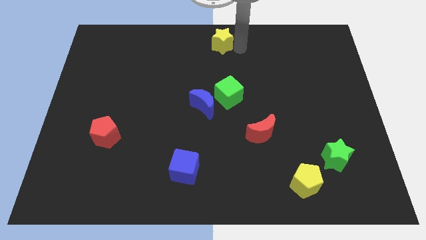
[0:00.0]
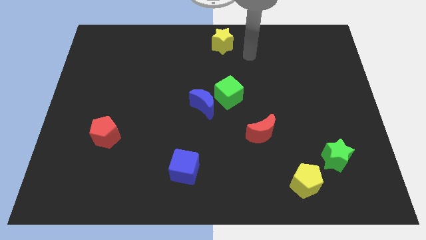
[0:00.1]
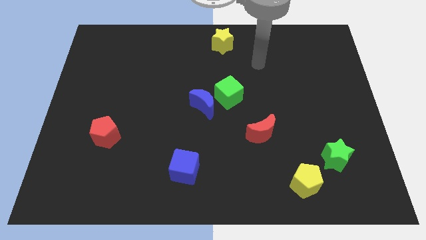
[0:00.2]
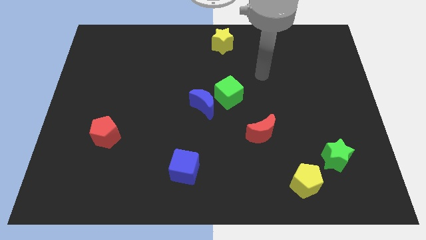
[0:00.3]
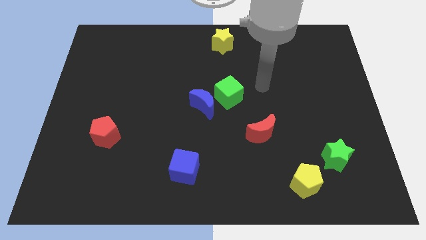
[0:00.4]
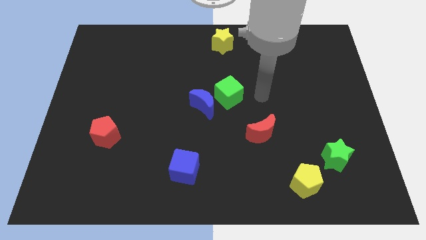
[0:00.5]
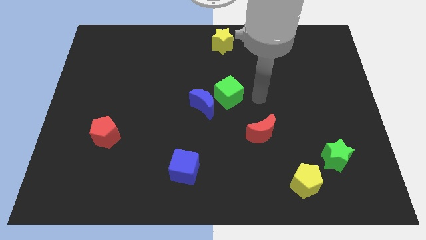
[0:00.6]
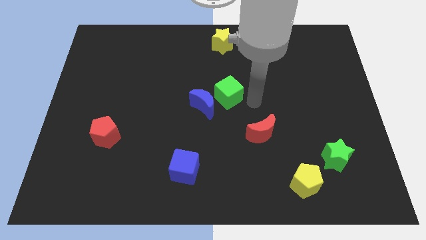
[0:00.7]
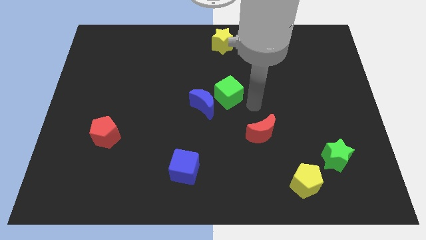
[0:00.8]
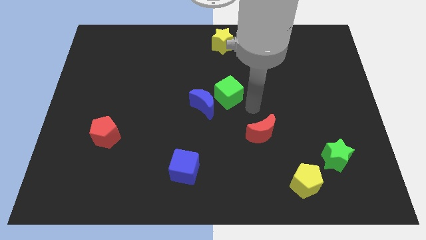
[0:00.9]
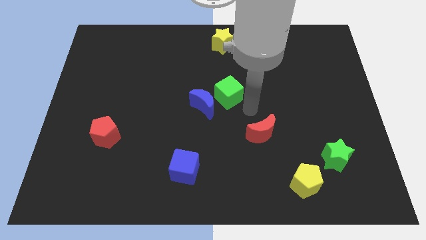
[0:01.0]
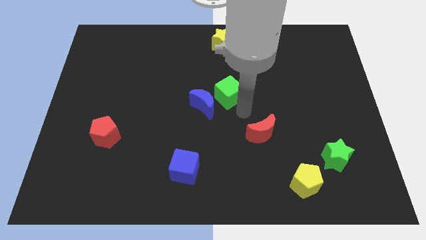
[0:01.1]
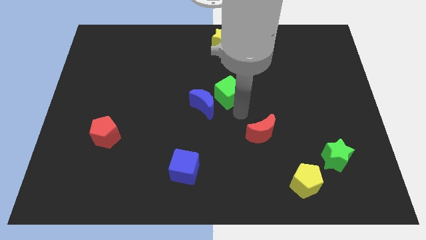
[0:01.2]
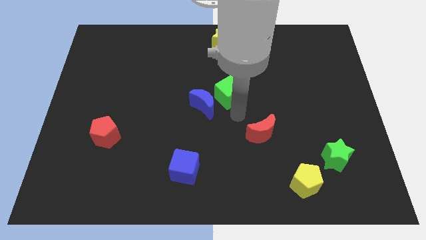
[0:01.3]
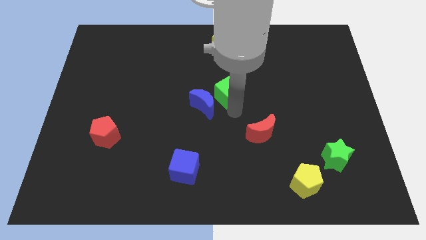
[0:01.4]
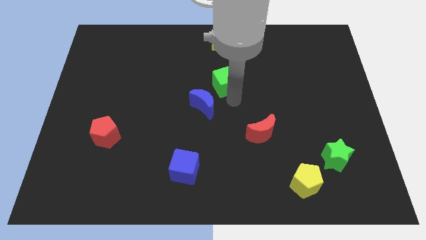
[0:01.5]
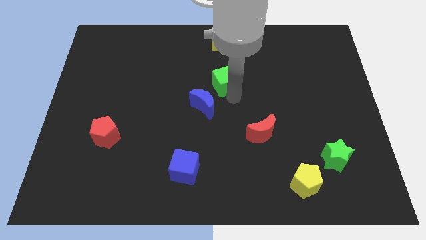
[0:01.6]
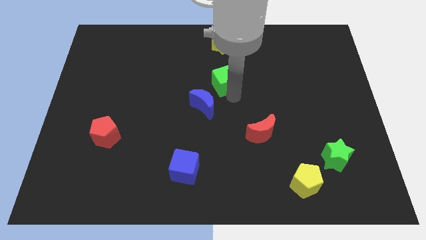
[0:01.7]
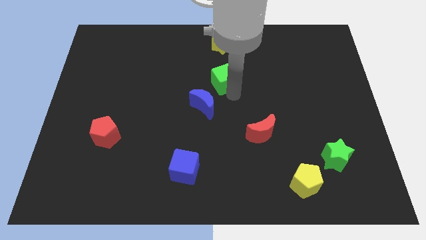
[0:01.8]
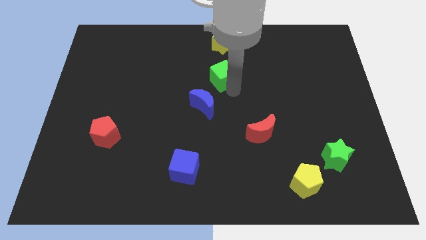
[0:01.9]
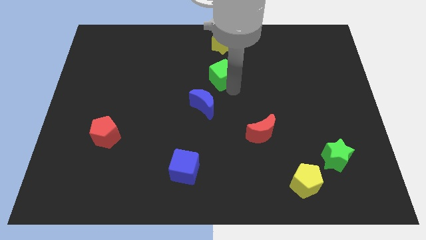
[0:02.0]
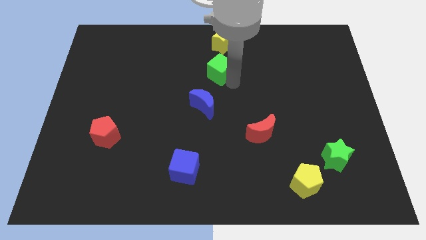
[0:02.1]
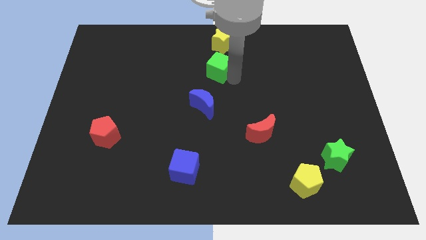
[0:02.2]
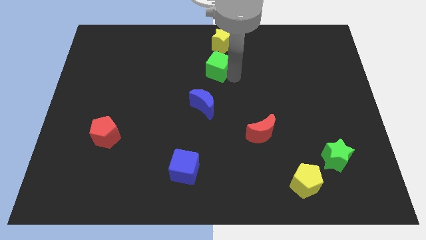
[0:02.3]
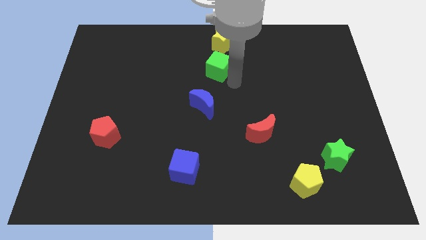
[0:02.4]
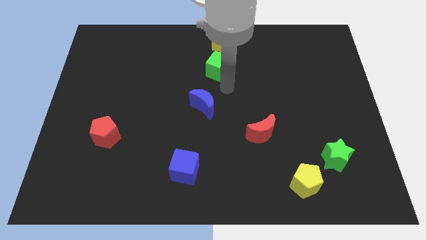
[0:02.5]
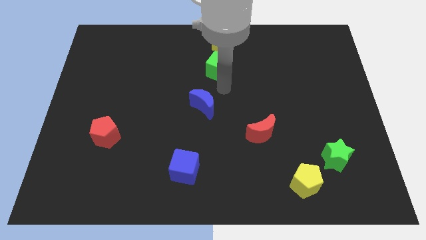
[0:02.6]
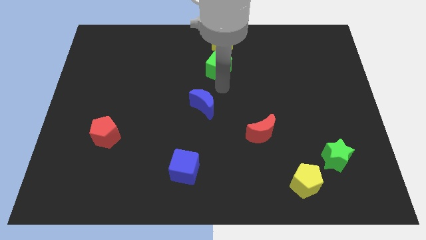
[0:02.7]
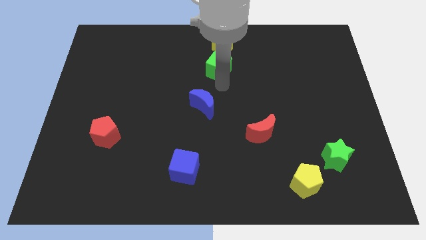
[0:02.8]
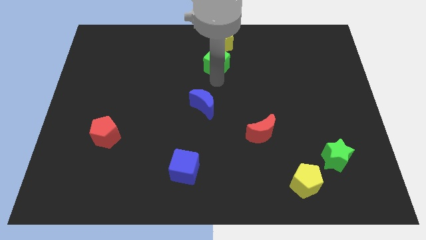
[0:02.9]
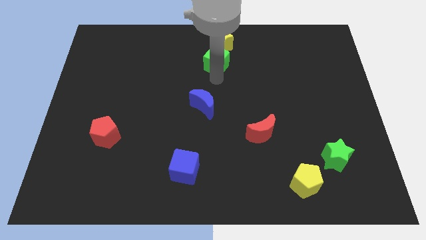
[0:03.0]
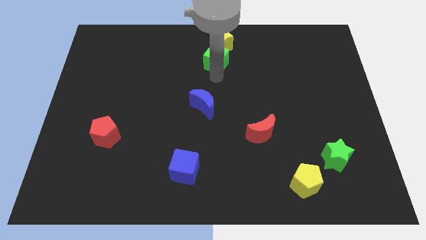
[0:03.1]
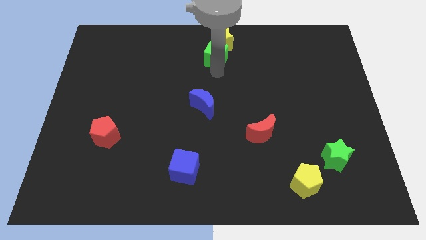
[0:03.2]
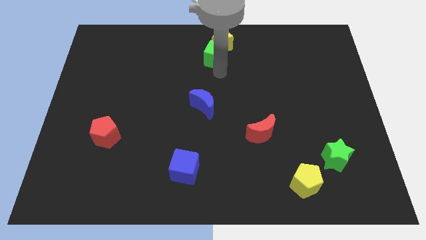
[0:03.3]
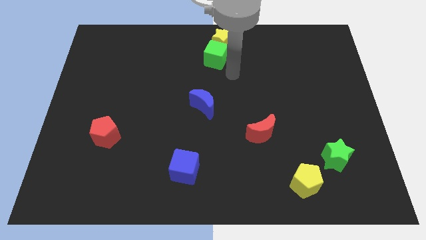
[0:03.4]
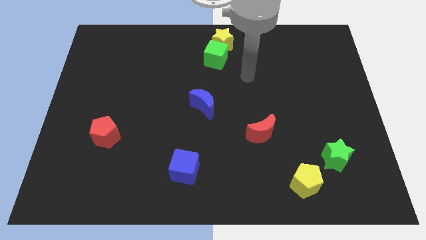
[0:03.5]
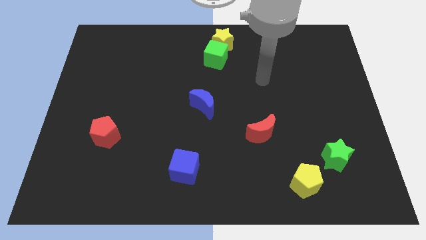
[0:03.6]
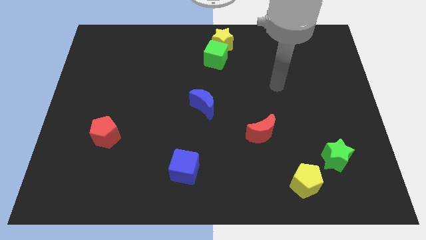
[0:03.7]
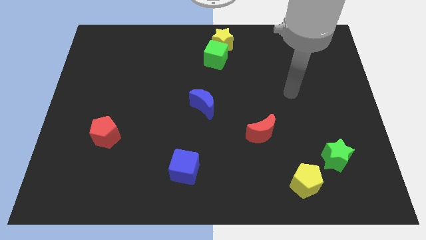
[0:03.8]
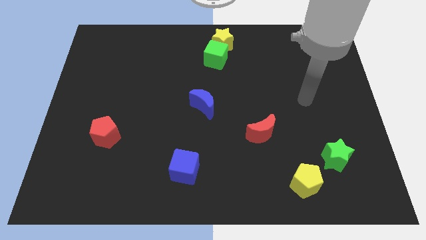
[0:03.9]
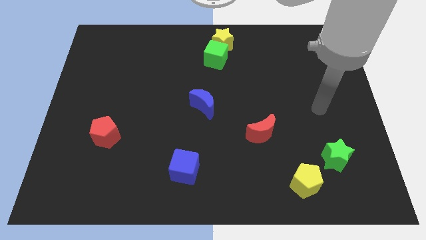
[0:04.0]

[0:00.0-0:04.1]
push the green cube below the yellow star

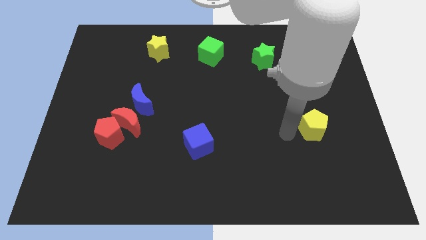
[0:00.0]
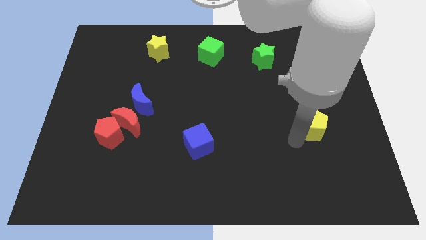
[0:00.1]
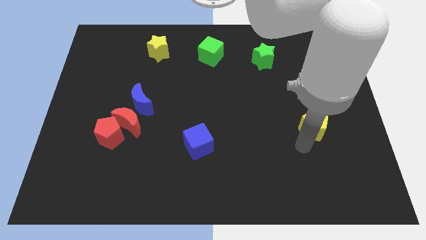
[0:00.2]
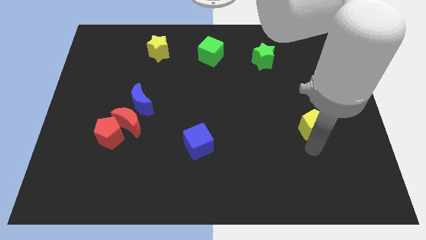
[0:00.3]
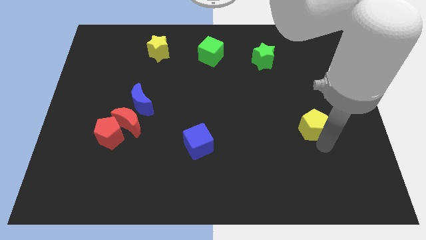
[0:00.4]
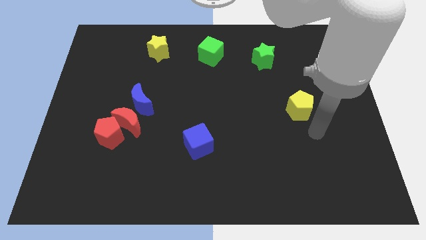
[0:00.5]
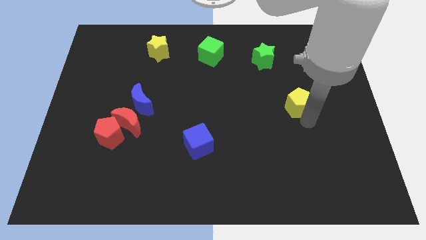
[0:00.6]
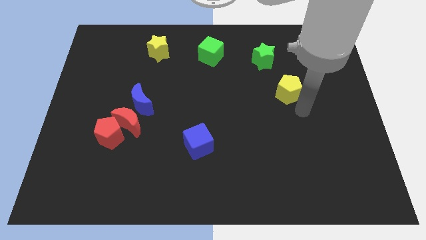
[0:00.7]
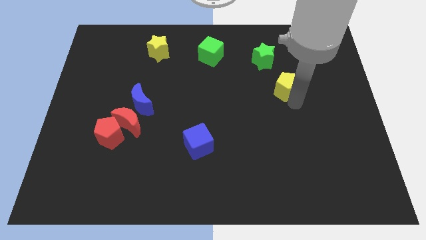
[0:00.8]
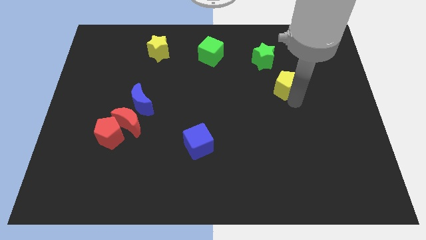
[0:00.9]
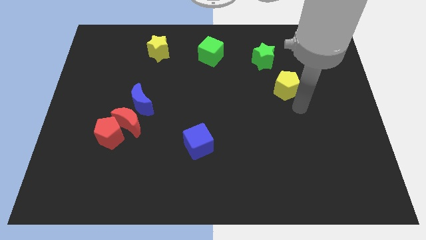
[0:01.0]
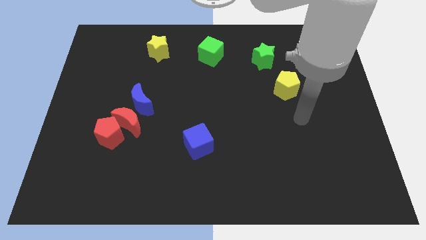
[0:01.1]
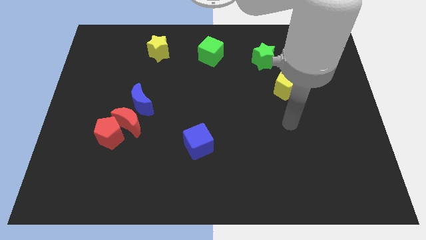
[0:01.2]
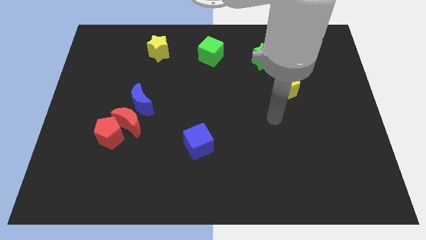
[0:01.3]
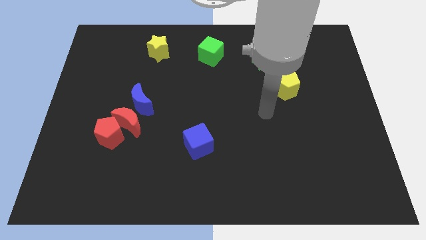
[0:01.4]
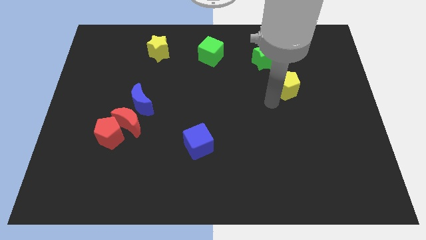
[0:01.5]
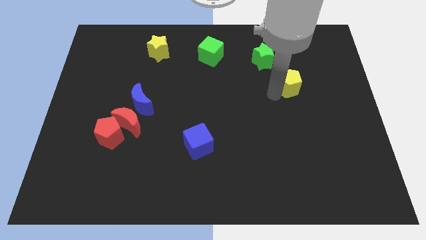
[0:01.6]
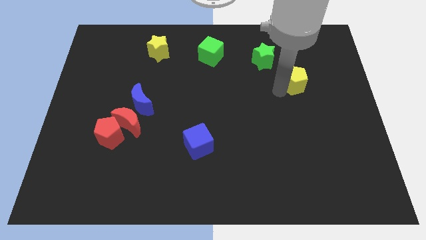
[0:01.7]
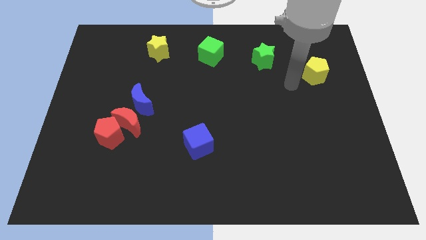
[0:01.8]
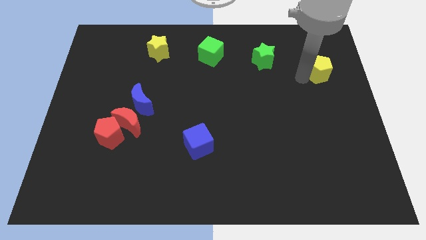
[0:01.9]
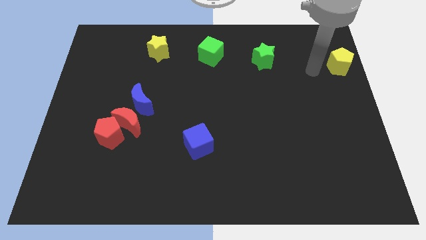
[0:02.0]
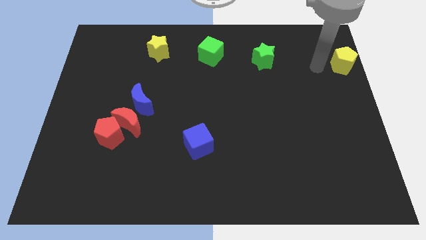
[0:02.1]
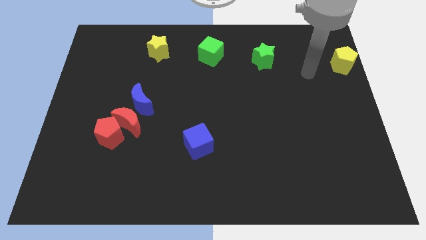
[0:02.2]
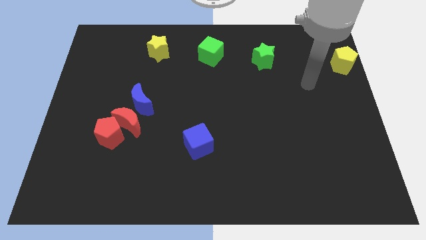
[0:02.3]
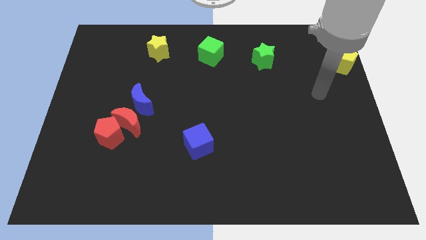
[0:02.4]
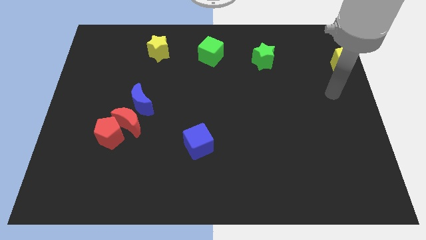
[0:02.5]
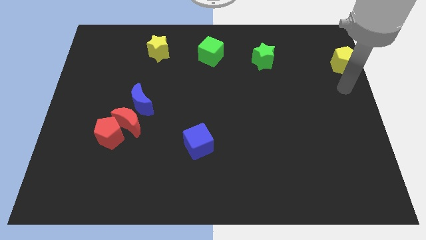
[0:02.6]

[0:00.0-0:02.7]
place yellow pentagon to the right of green star

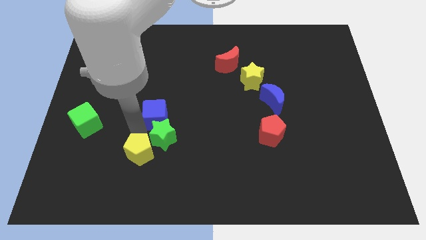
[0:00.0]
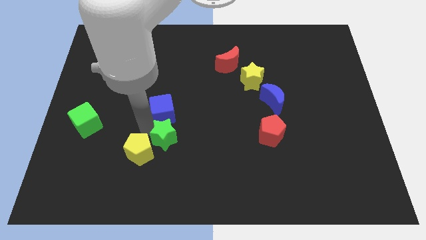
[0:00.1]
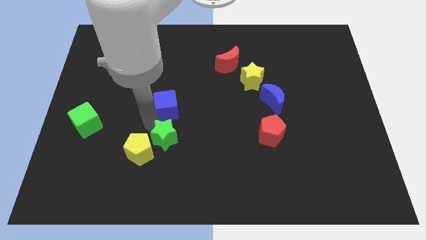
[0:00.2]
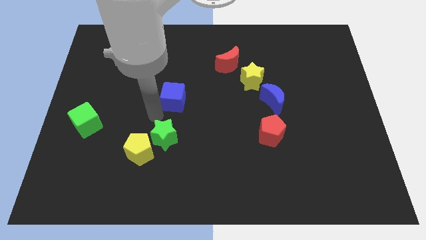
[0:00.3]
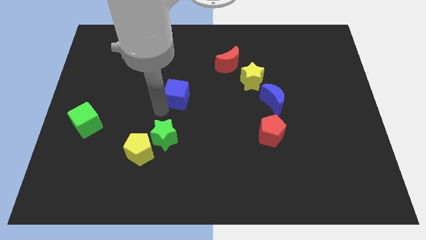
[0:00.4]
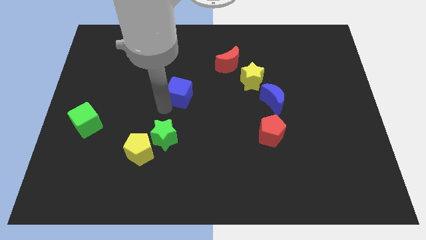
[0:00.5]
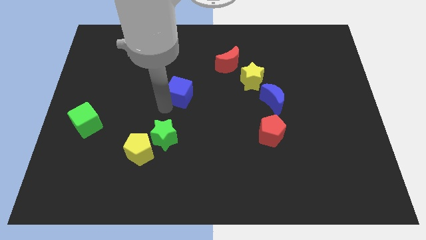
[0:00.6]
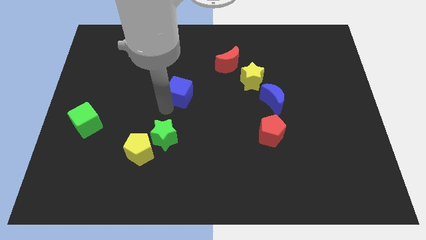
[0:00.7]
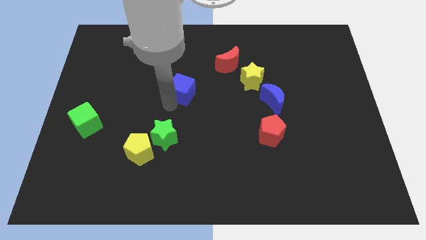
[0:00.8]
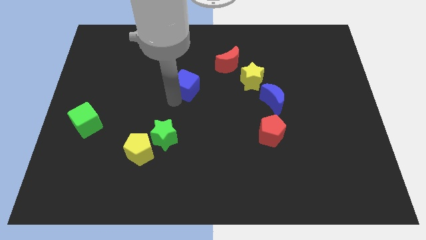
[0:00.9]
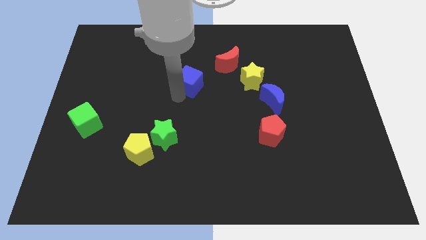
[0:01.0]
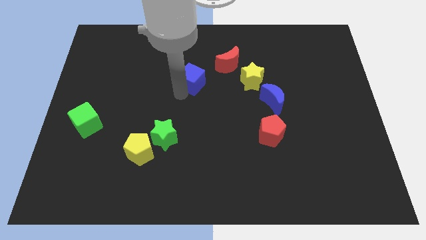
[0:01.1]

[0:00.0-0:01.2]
separate the blue cube from green star

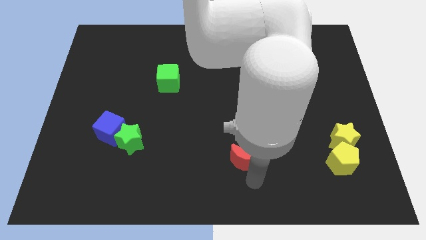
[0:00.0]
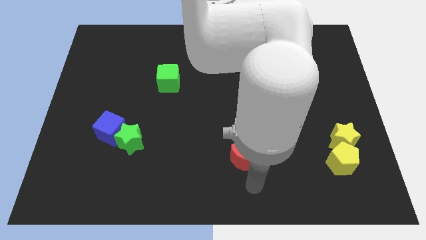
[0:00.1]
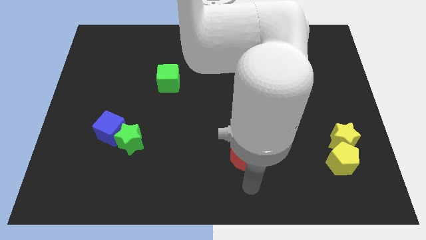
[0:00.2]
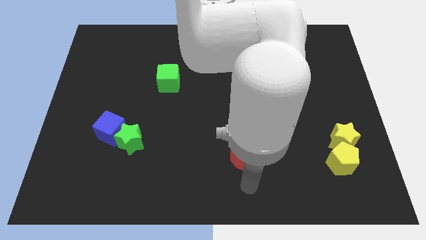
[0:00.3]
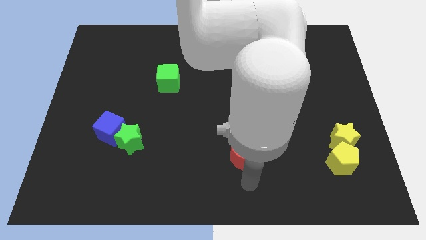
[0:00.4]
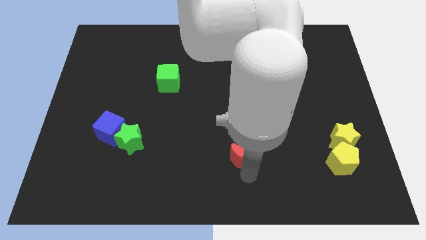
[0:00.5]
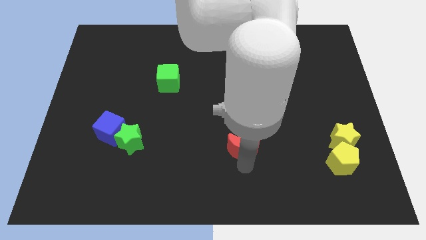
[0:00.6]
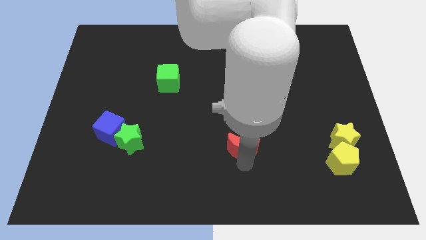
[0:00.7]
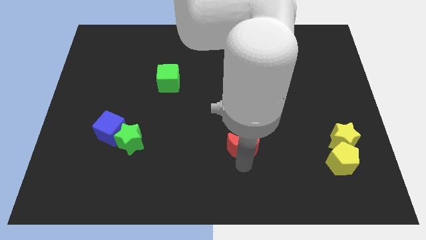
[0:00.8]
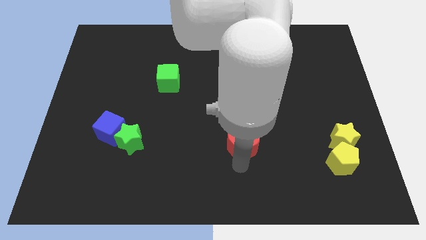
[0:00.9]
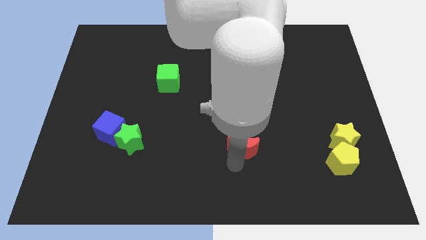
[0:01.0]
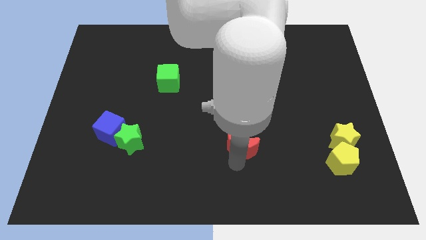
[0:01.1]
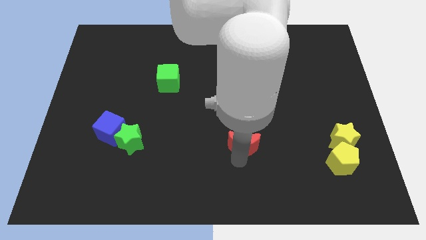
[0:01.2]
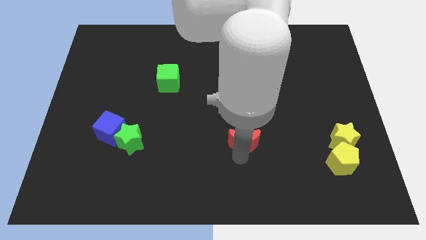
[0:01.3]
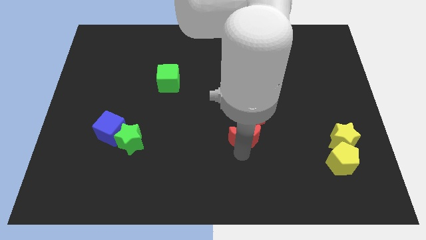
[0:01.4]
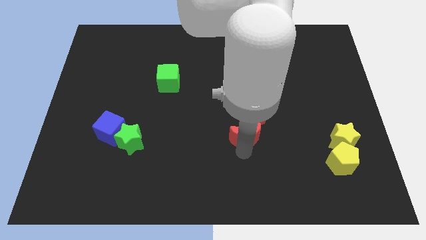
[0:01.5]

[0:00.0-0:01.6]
place red moon parallel to yellow star
